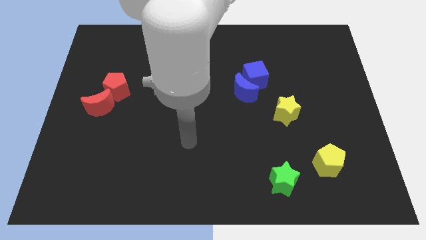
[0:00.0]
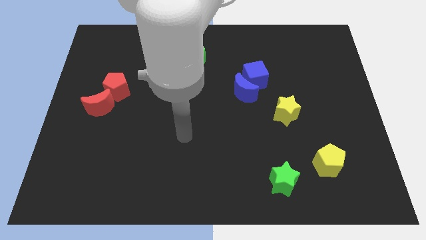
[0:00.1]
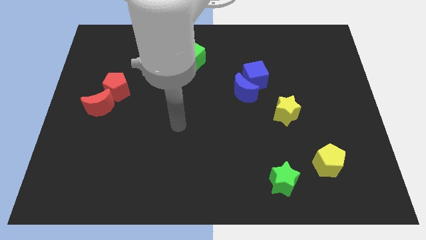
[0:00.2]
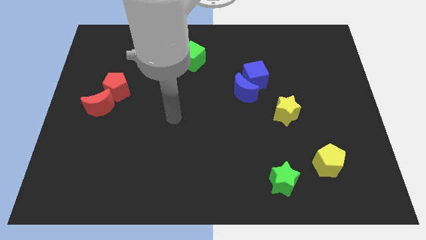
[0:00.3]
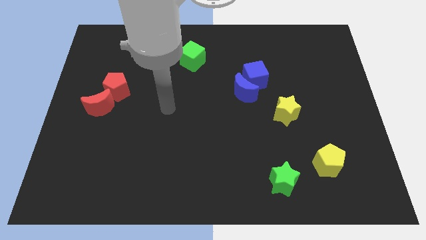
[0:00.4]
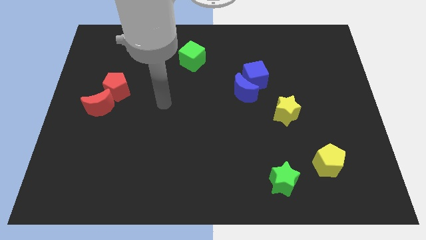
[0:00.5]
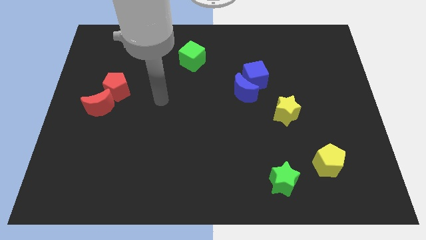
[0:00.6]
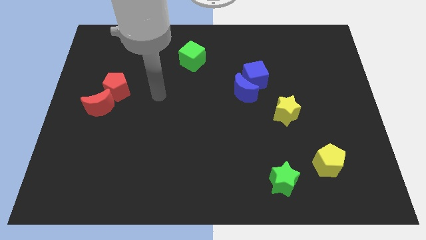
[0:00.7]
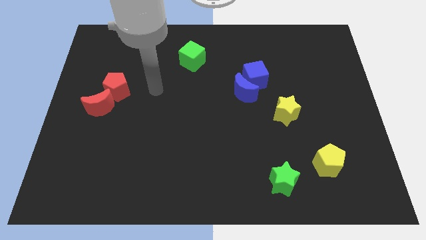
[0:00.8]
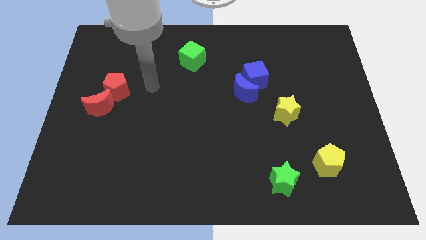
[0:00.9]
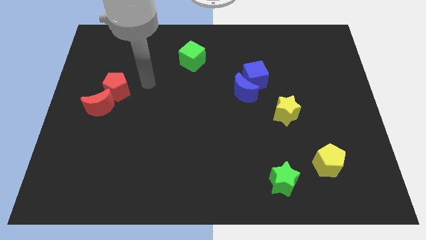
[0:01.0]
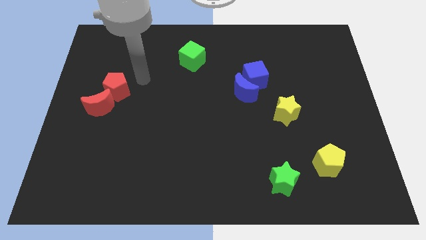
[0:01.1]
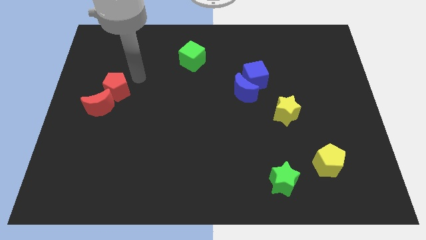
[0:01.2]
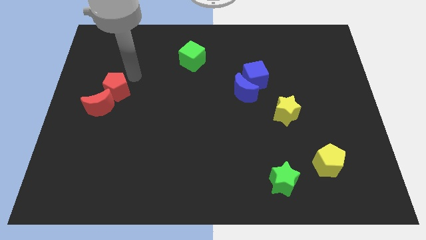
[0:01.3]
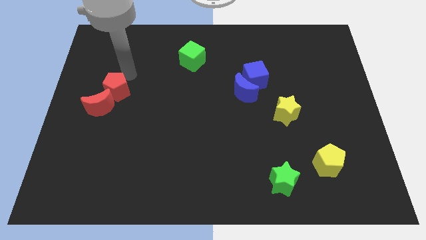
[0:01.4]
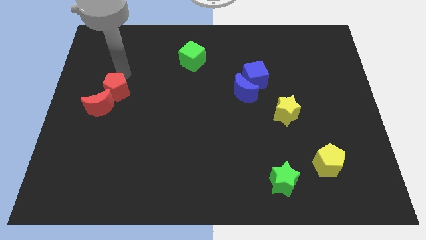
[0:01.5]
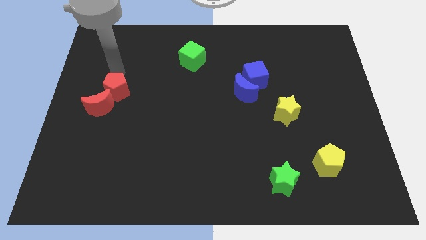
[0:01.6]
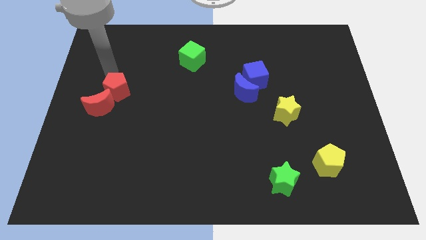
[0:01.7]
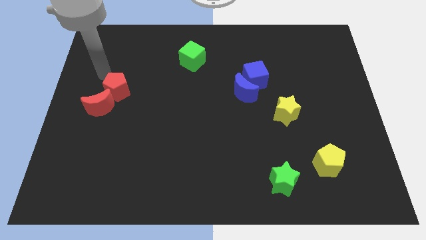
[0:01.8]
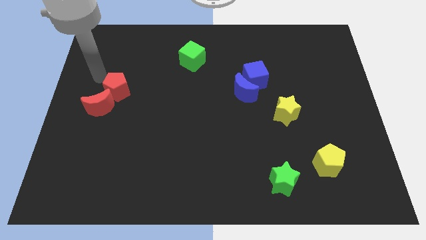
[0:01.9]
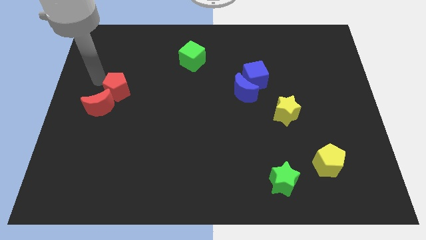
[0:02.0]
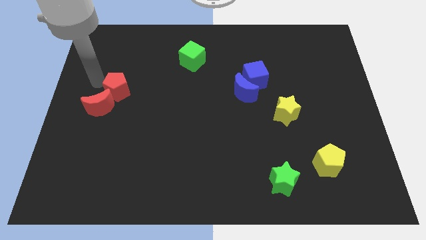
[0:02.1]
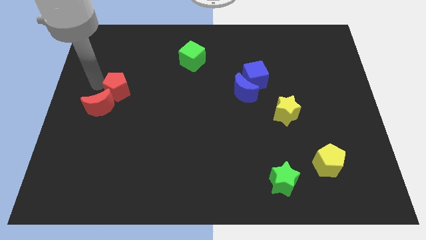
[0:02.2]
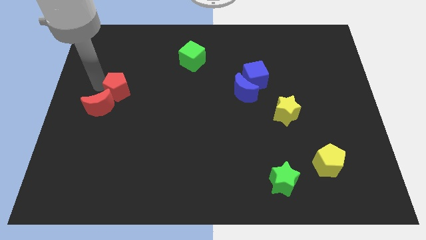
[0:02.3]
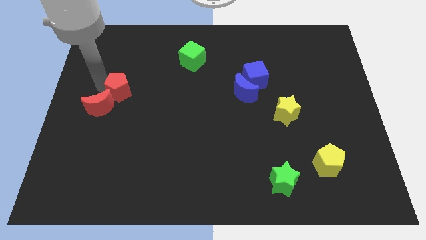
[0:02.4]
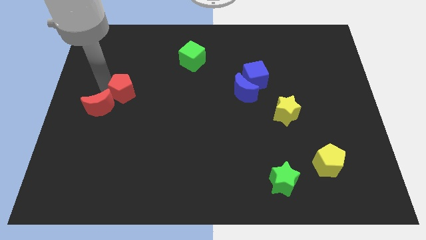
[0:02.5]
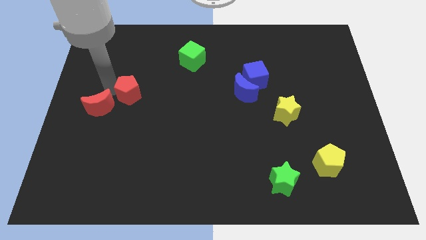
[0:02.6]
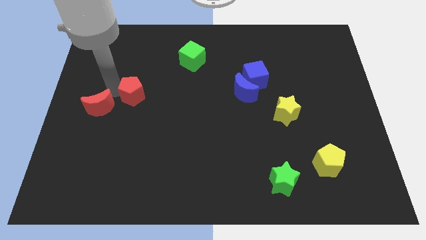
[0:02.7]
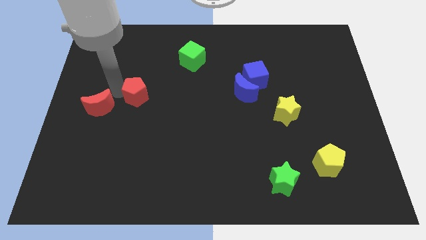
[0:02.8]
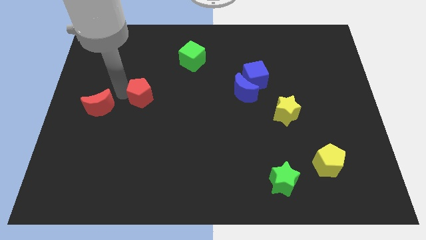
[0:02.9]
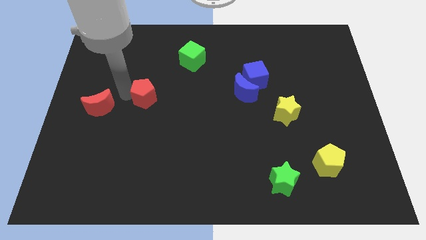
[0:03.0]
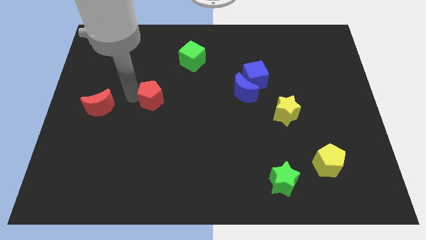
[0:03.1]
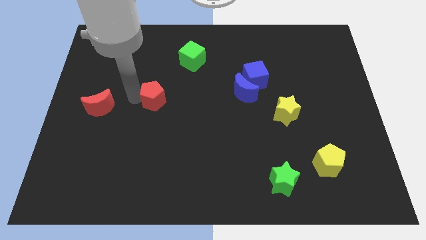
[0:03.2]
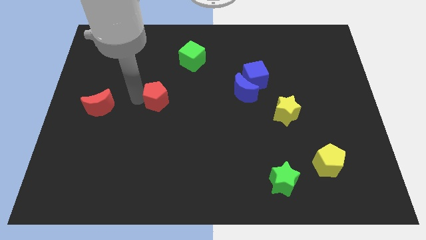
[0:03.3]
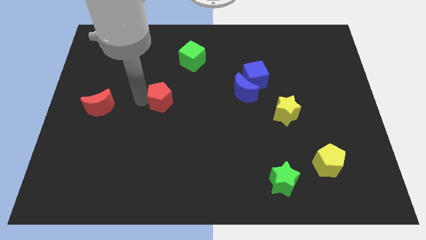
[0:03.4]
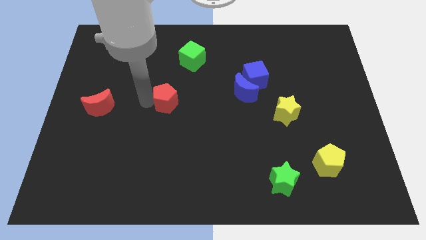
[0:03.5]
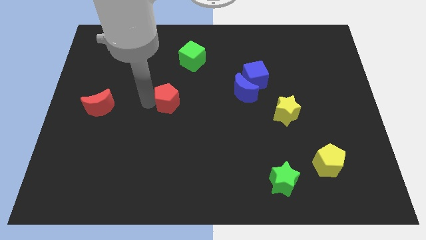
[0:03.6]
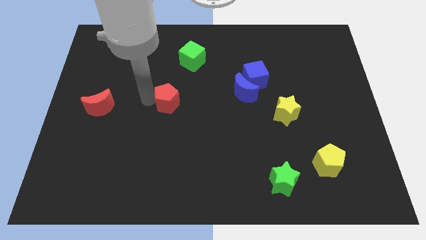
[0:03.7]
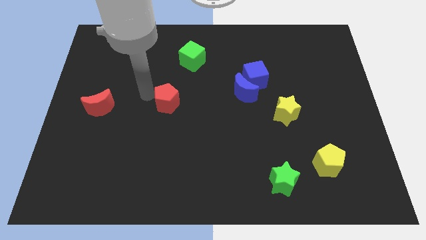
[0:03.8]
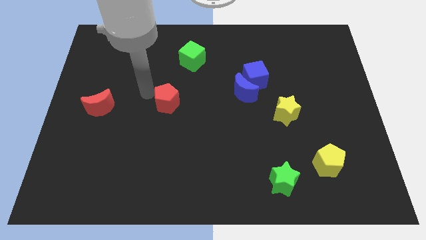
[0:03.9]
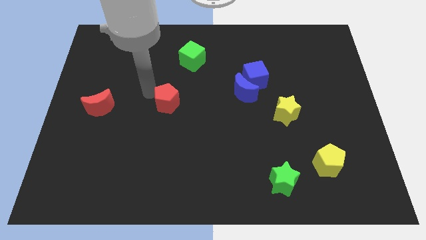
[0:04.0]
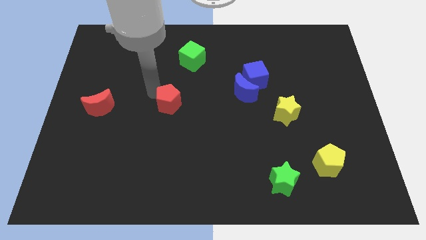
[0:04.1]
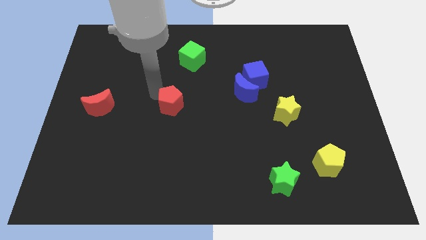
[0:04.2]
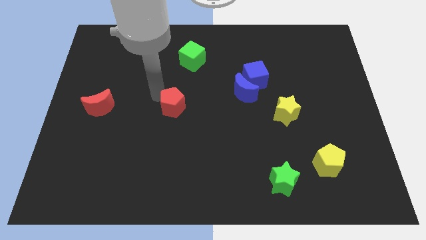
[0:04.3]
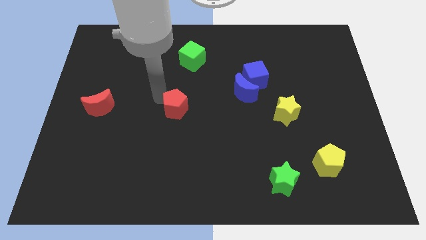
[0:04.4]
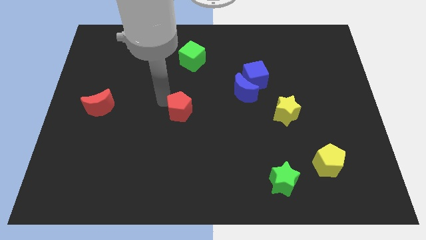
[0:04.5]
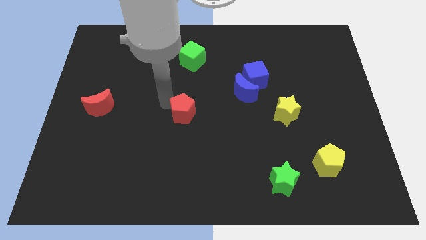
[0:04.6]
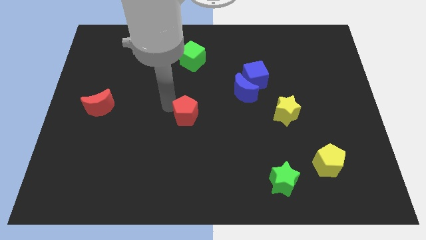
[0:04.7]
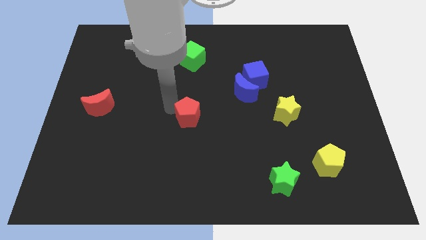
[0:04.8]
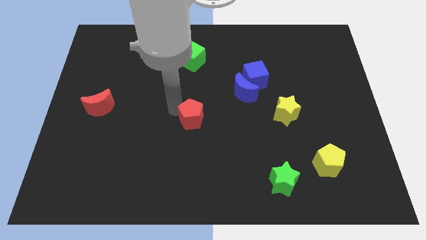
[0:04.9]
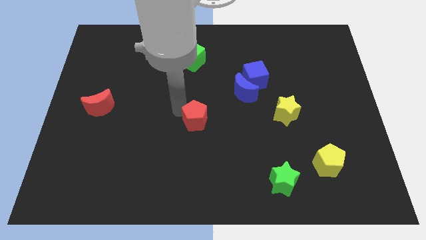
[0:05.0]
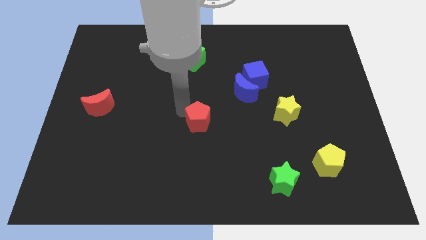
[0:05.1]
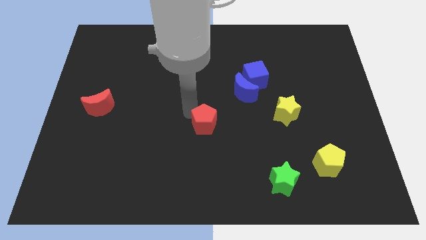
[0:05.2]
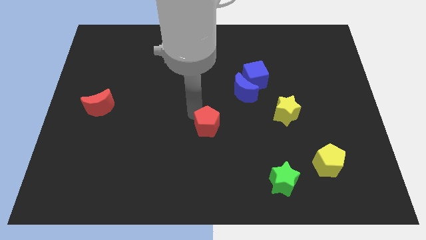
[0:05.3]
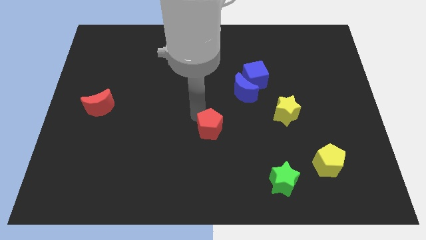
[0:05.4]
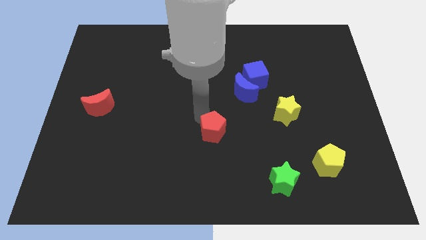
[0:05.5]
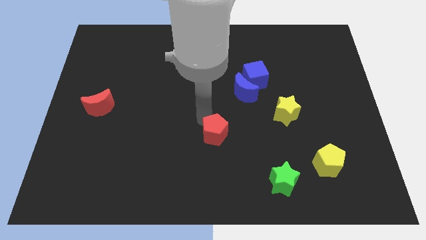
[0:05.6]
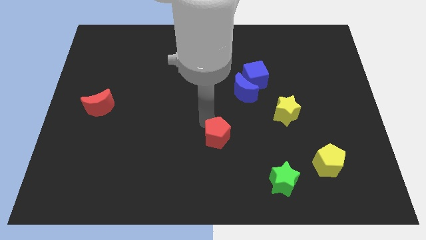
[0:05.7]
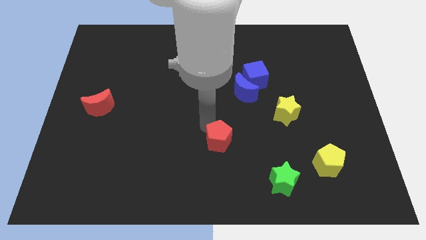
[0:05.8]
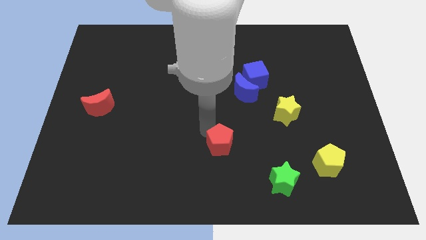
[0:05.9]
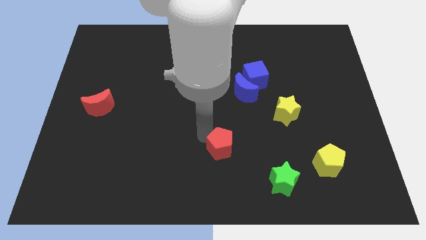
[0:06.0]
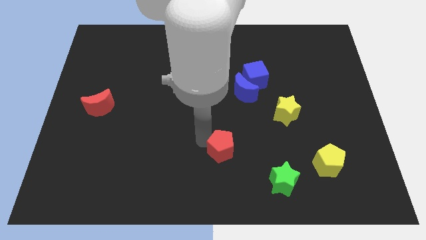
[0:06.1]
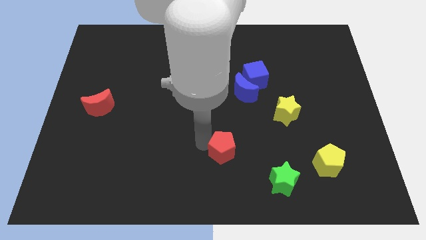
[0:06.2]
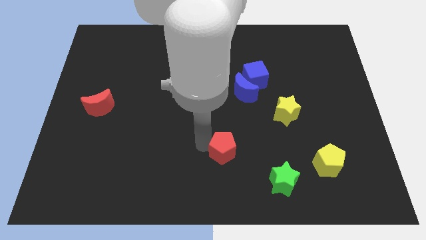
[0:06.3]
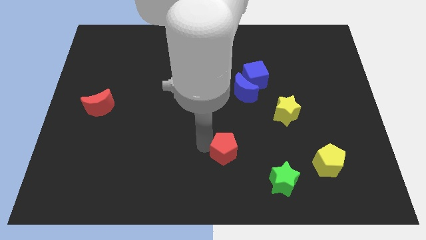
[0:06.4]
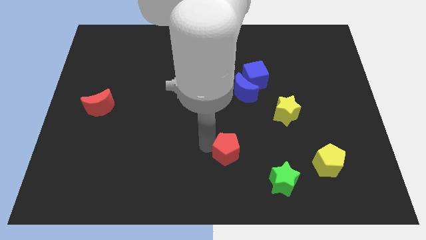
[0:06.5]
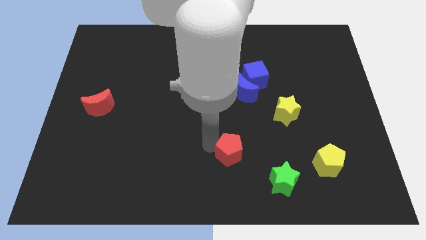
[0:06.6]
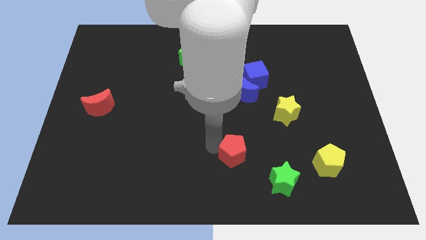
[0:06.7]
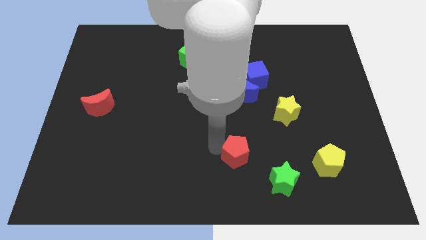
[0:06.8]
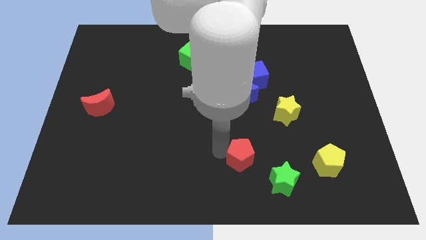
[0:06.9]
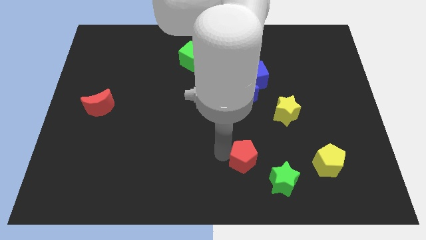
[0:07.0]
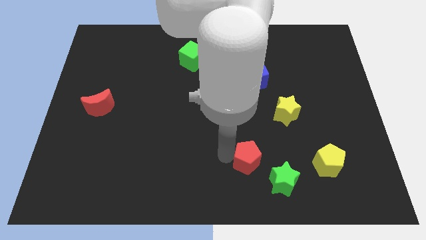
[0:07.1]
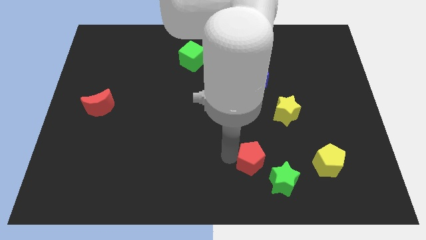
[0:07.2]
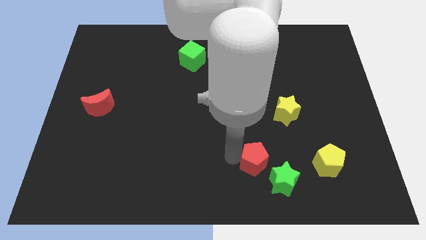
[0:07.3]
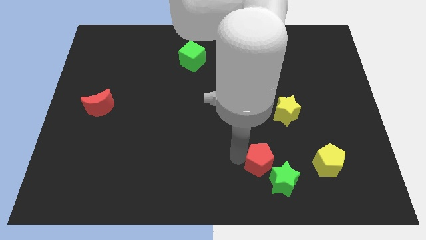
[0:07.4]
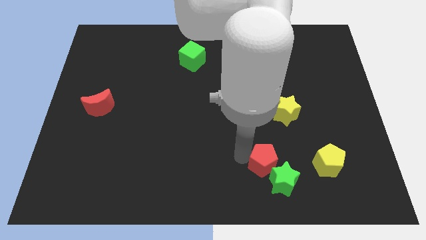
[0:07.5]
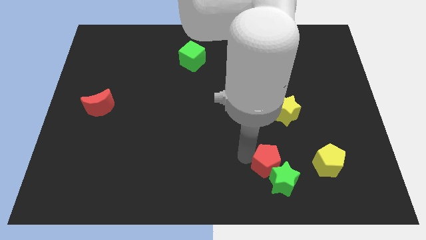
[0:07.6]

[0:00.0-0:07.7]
push the red pentagon towards the green star

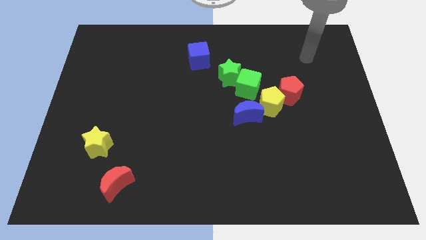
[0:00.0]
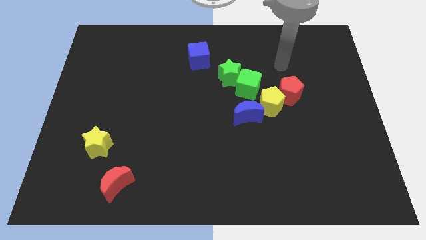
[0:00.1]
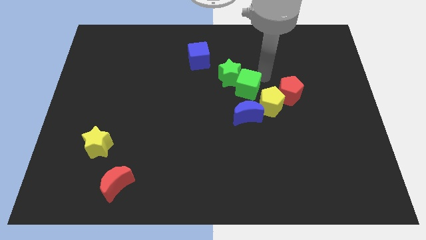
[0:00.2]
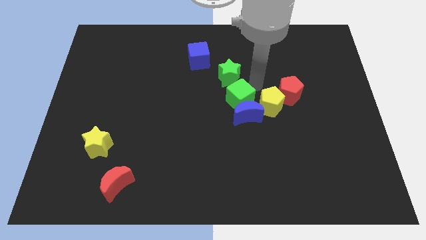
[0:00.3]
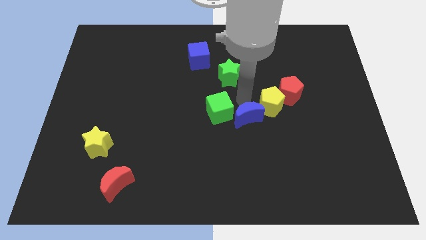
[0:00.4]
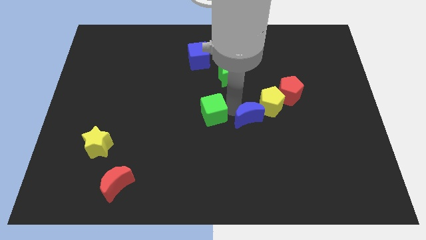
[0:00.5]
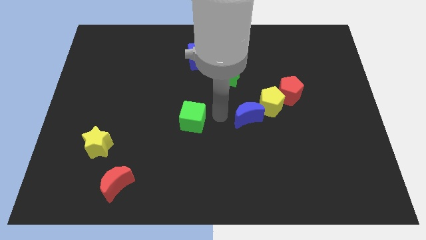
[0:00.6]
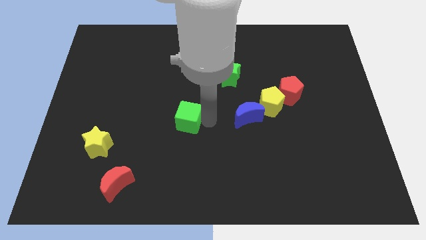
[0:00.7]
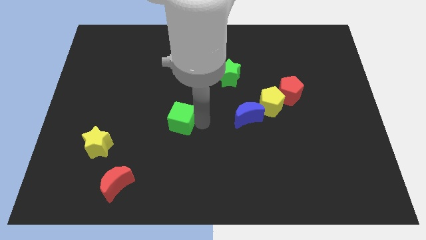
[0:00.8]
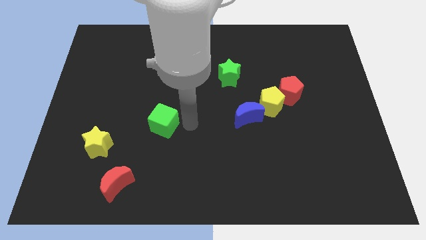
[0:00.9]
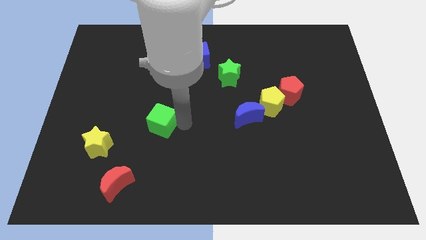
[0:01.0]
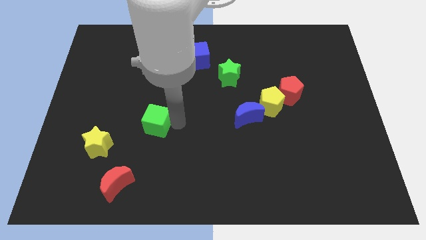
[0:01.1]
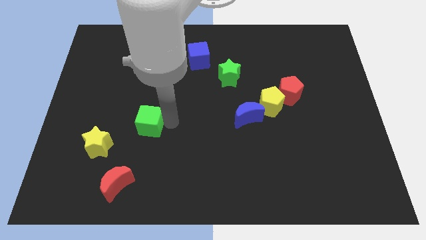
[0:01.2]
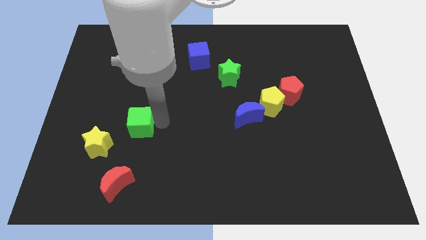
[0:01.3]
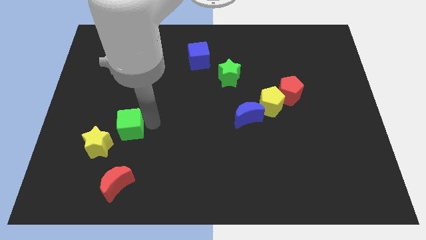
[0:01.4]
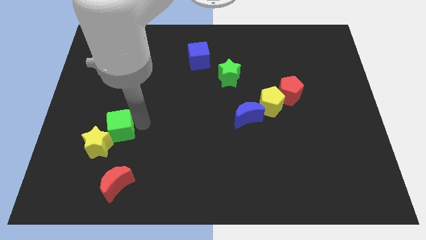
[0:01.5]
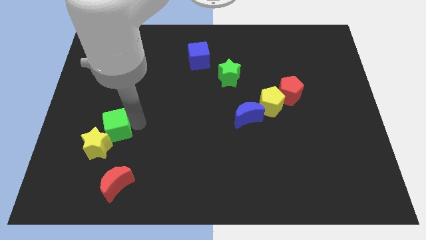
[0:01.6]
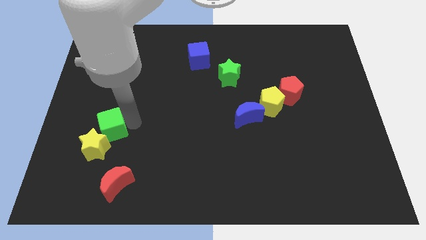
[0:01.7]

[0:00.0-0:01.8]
slide the green cube to the yellow star
